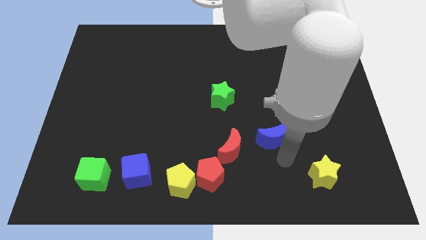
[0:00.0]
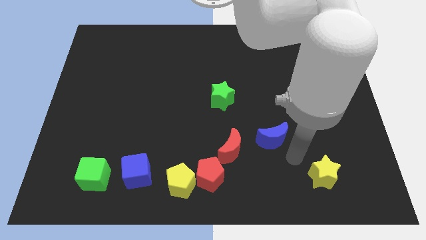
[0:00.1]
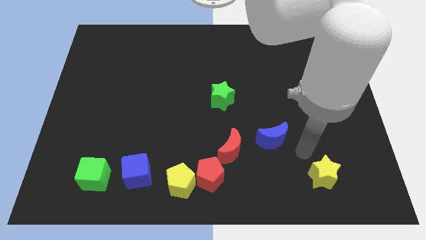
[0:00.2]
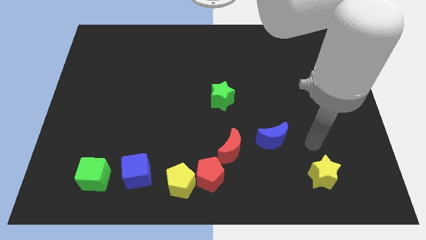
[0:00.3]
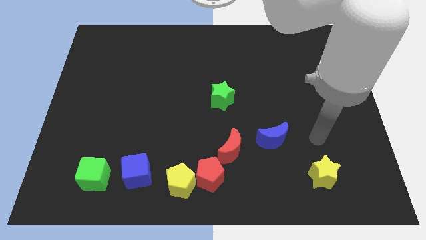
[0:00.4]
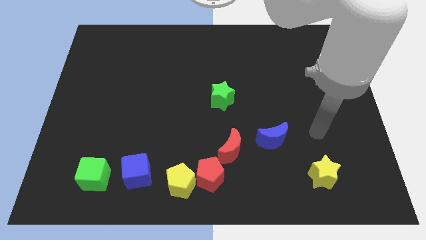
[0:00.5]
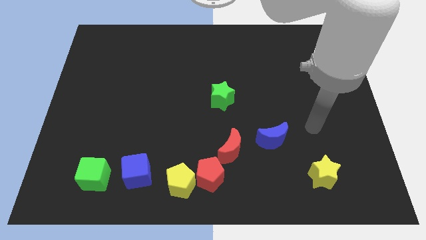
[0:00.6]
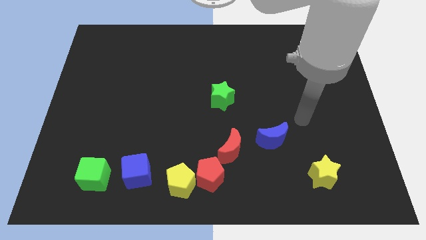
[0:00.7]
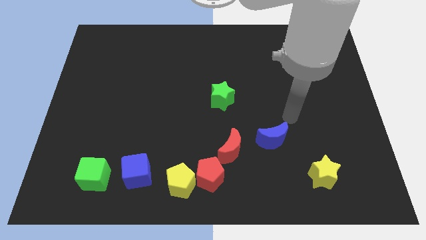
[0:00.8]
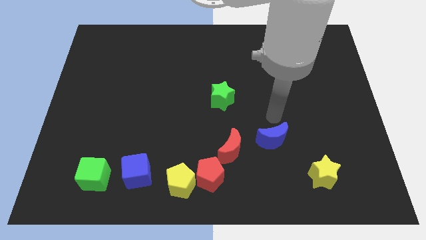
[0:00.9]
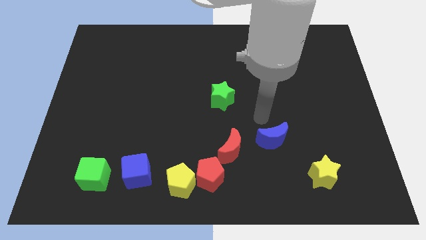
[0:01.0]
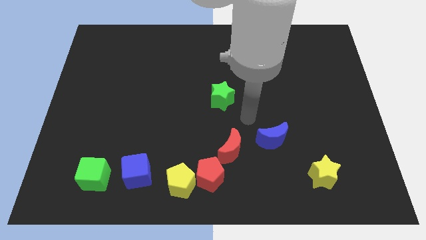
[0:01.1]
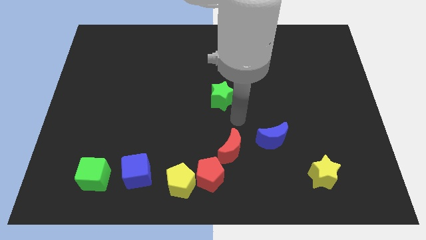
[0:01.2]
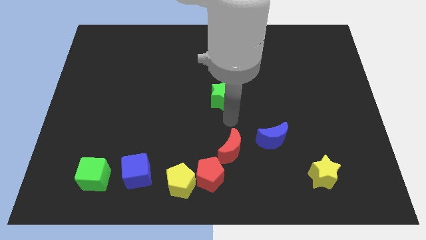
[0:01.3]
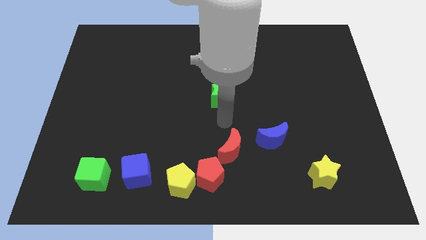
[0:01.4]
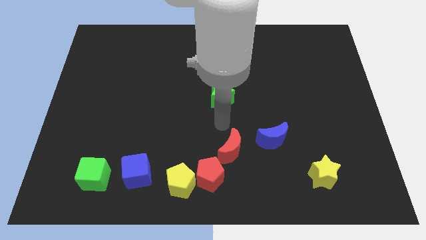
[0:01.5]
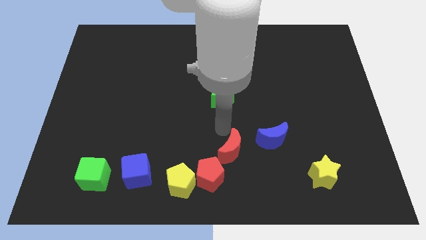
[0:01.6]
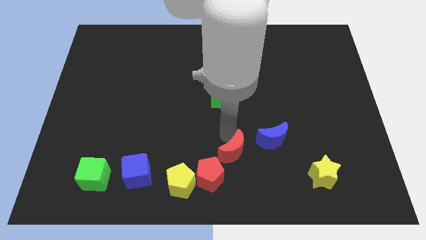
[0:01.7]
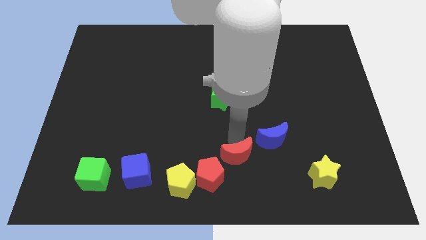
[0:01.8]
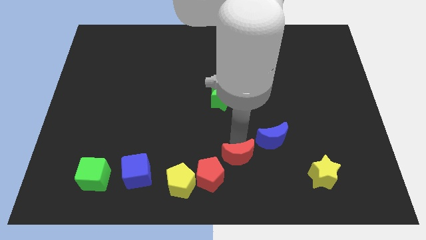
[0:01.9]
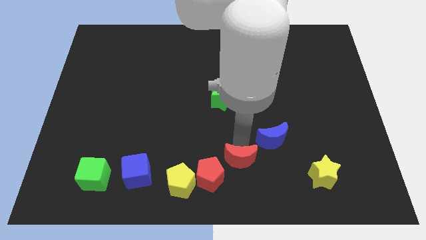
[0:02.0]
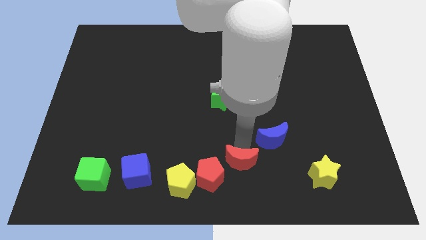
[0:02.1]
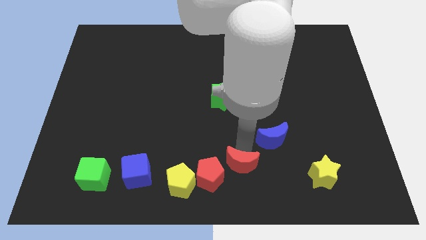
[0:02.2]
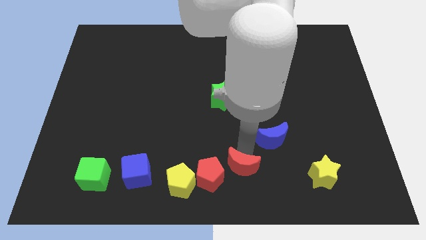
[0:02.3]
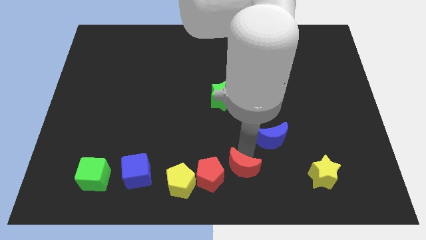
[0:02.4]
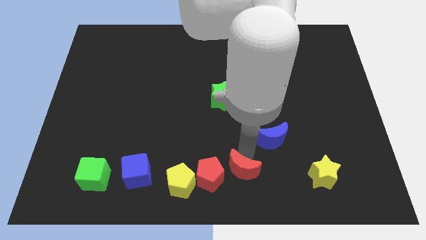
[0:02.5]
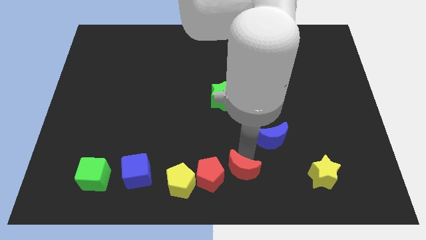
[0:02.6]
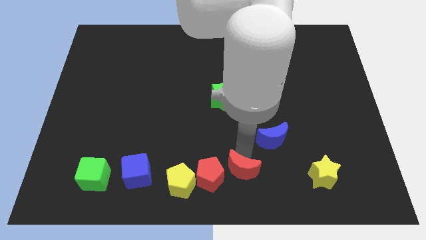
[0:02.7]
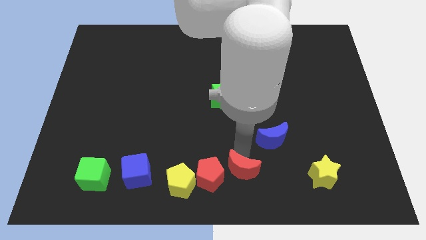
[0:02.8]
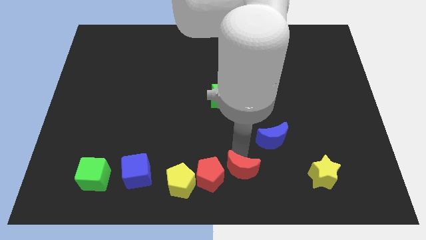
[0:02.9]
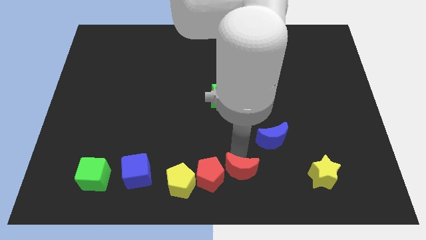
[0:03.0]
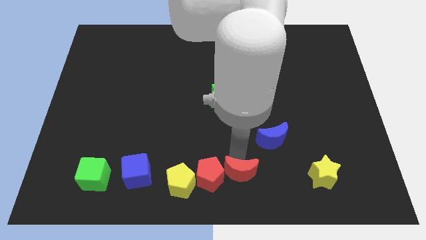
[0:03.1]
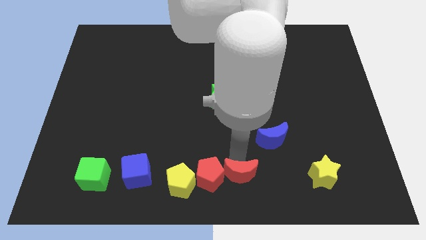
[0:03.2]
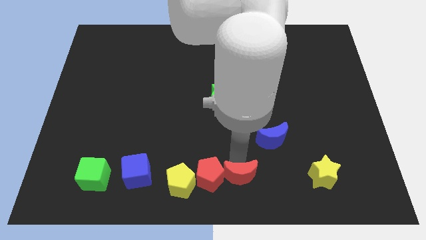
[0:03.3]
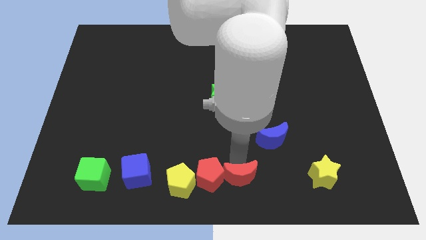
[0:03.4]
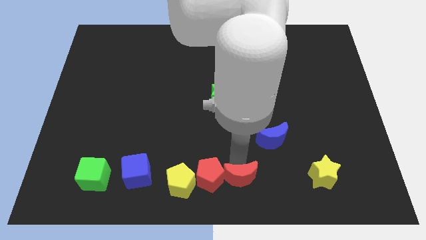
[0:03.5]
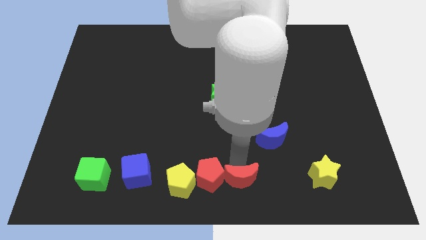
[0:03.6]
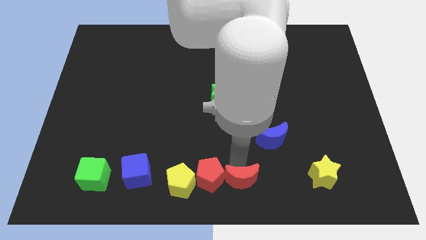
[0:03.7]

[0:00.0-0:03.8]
slide the red crescent down slightly

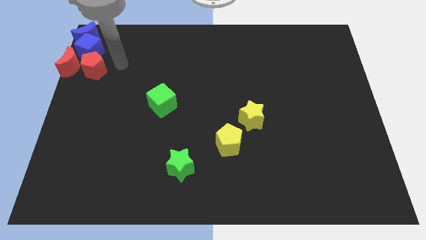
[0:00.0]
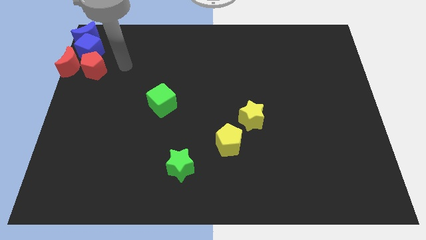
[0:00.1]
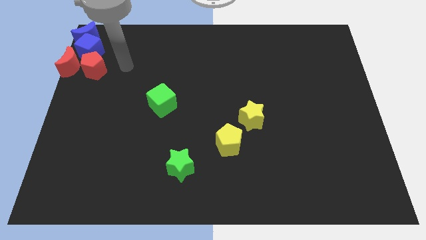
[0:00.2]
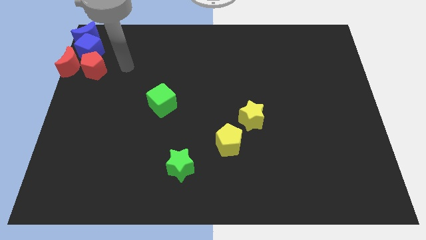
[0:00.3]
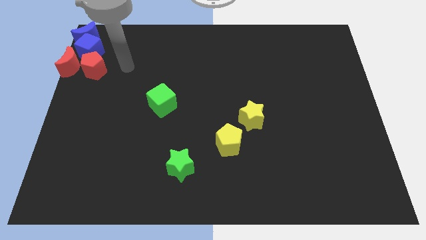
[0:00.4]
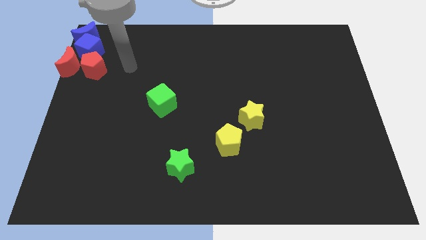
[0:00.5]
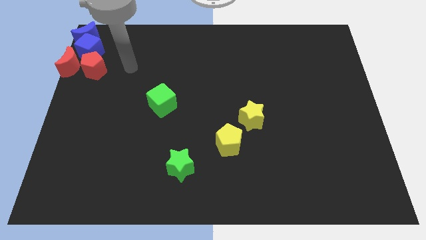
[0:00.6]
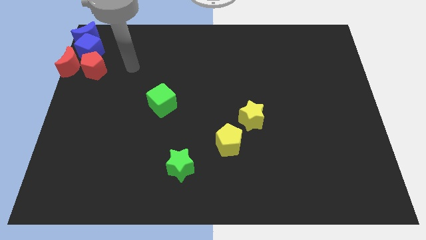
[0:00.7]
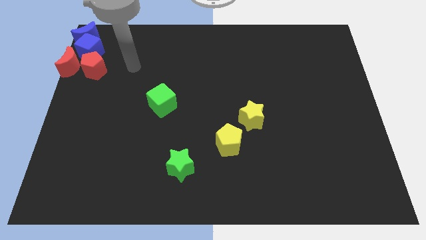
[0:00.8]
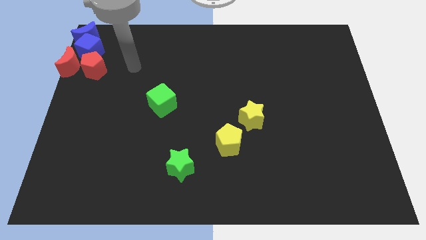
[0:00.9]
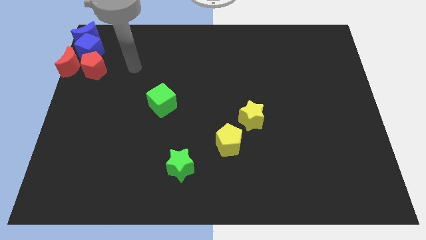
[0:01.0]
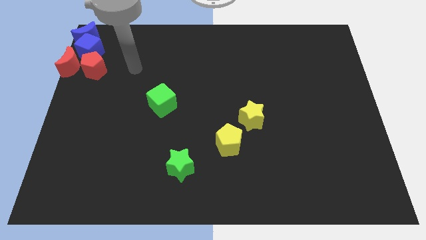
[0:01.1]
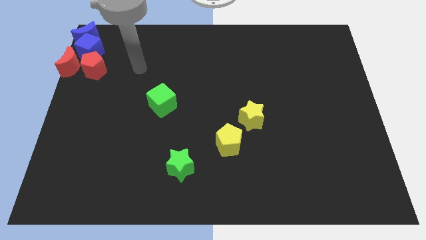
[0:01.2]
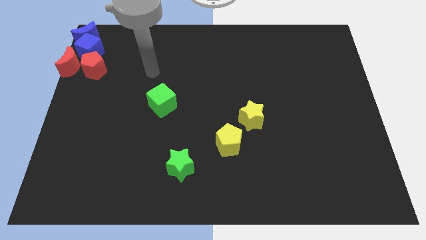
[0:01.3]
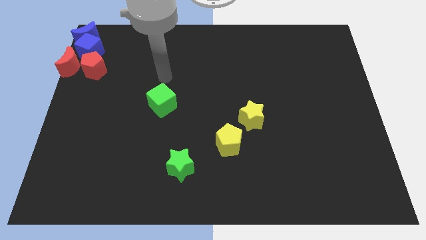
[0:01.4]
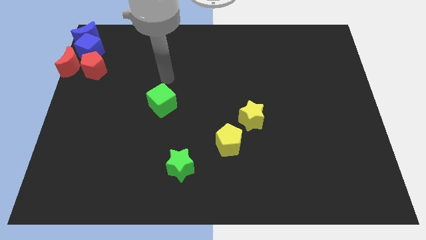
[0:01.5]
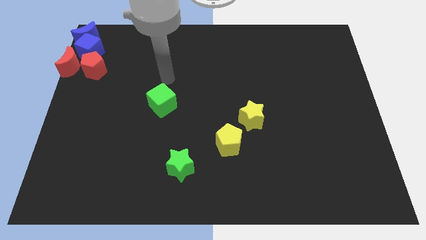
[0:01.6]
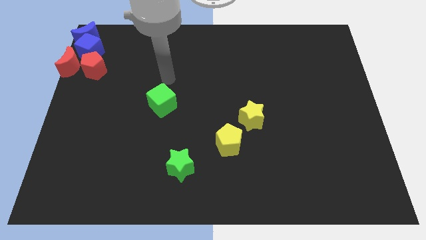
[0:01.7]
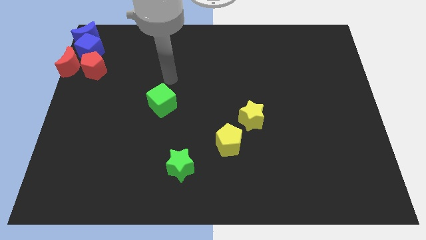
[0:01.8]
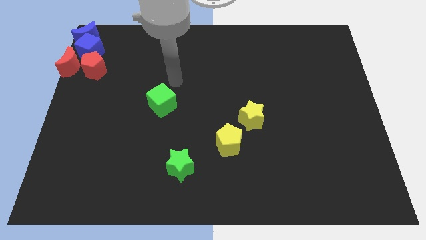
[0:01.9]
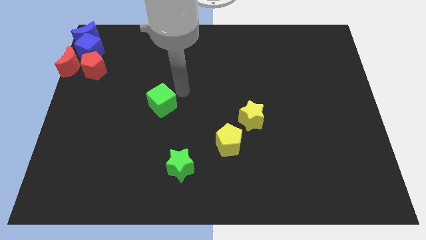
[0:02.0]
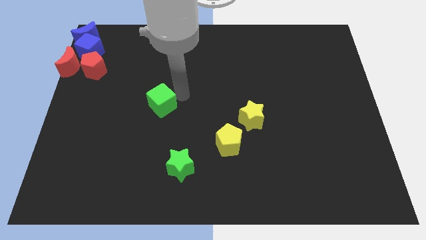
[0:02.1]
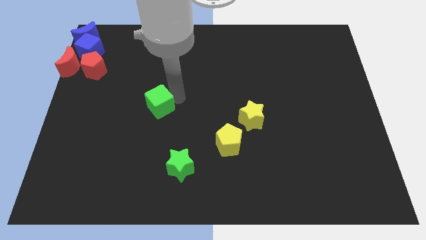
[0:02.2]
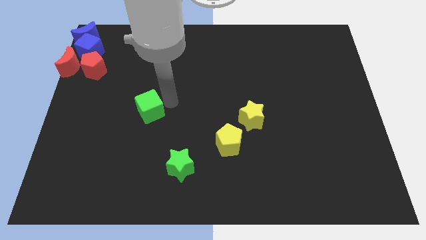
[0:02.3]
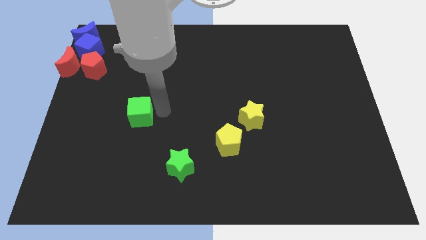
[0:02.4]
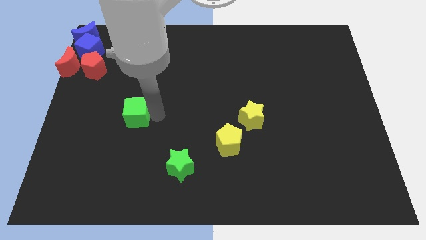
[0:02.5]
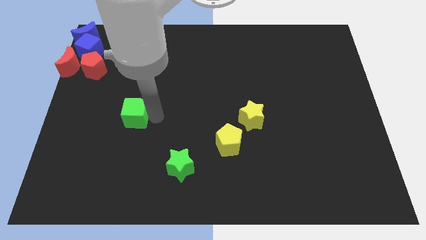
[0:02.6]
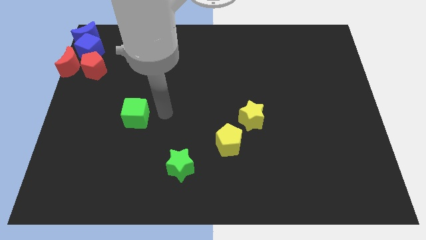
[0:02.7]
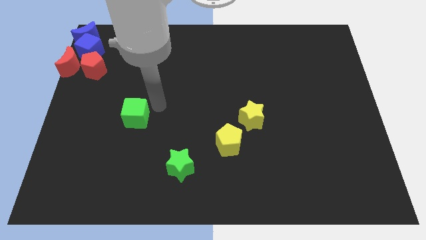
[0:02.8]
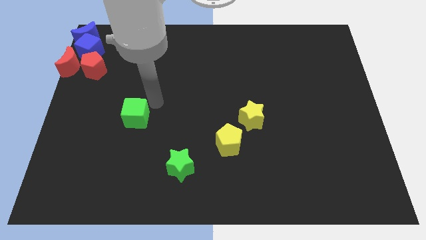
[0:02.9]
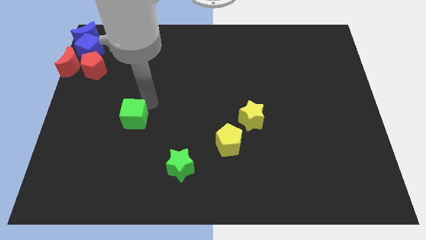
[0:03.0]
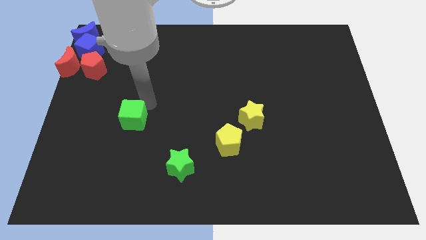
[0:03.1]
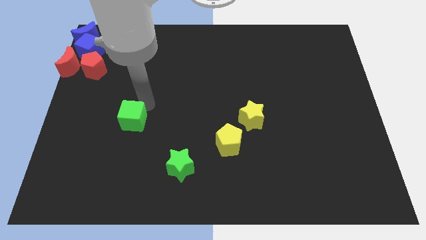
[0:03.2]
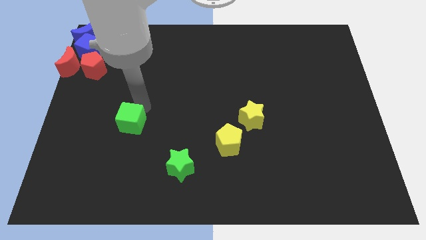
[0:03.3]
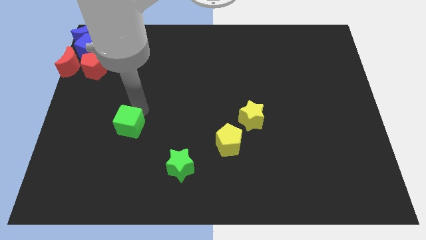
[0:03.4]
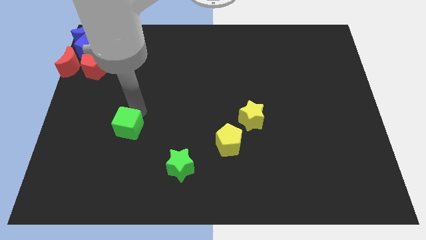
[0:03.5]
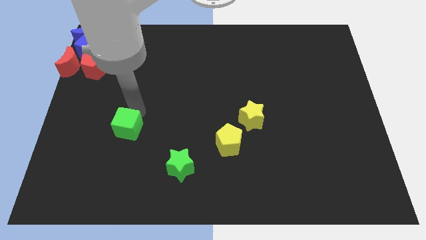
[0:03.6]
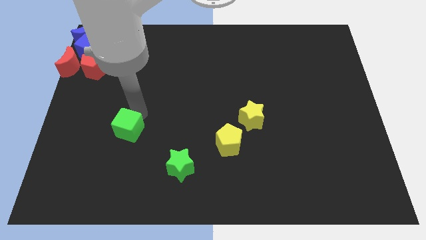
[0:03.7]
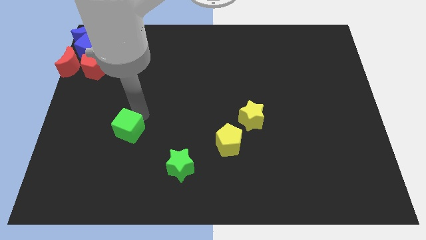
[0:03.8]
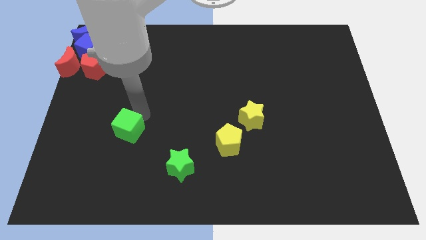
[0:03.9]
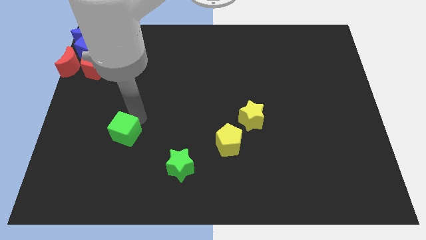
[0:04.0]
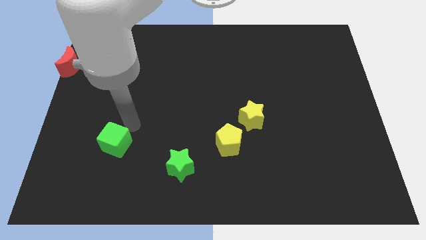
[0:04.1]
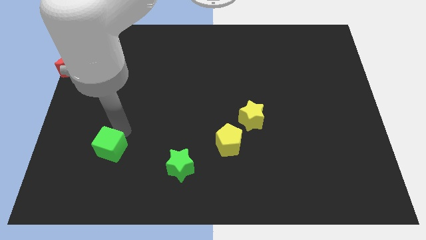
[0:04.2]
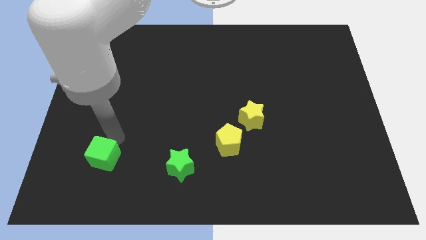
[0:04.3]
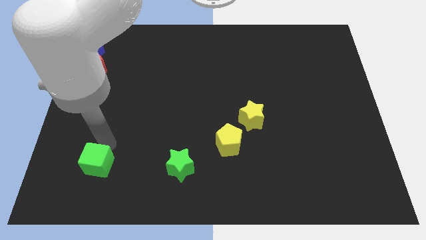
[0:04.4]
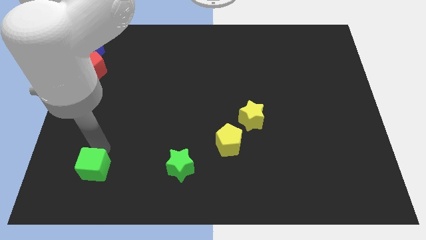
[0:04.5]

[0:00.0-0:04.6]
place the green cube to the left of the green star

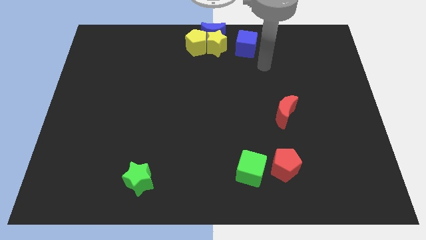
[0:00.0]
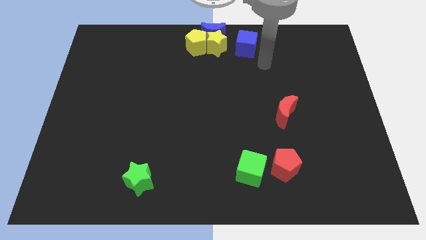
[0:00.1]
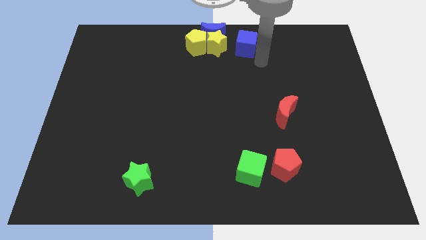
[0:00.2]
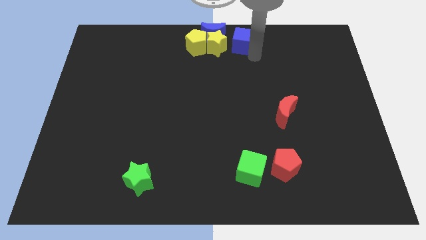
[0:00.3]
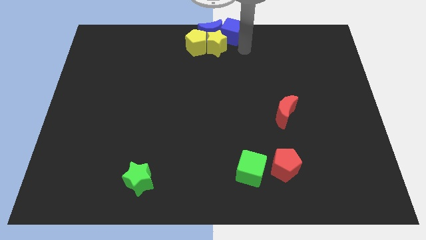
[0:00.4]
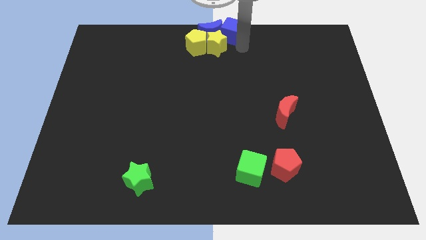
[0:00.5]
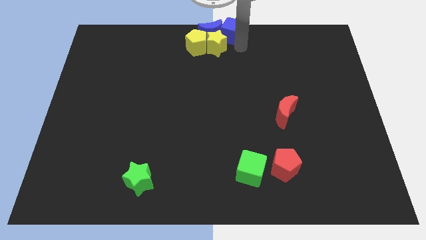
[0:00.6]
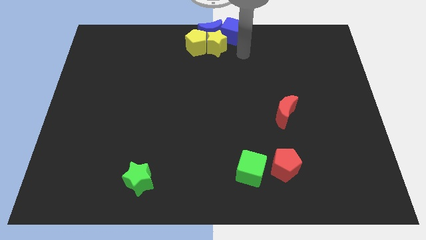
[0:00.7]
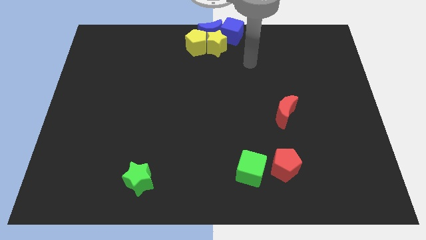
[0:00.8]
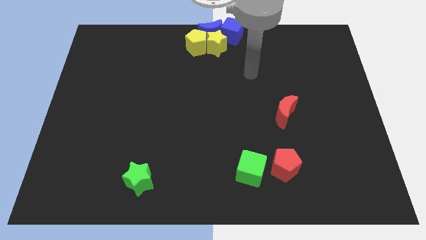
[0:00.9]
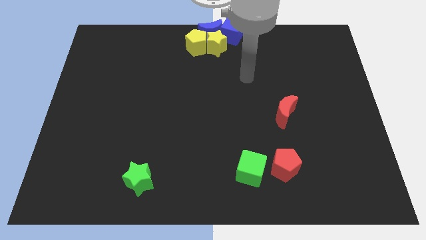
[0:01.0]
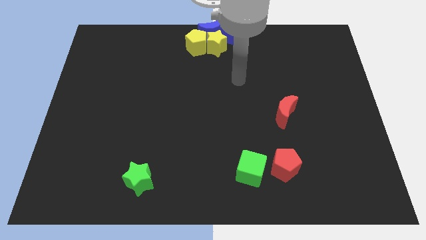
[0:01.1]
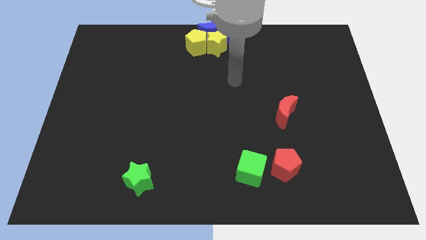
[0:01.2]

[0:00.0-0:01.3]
move the blue cube into the blue moon
